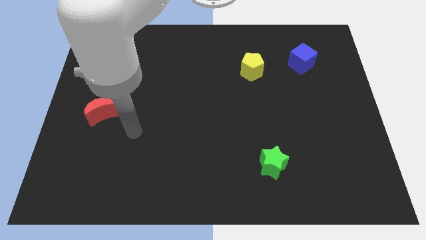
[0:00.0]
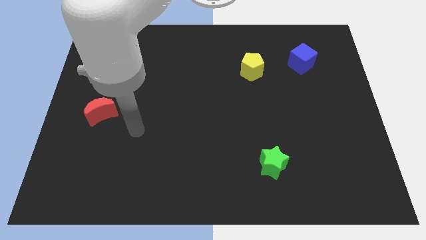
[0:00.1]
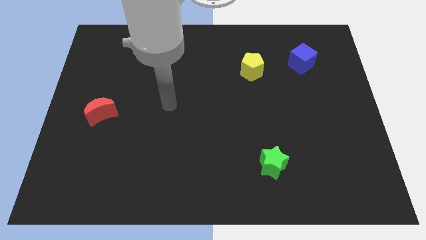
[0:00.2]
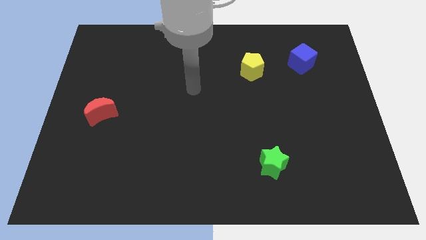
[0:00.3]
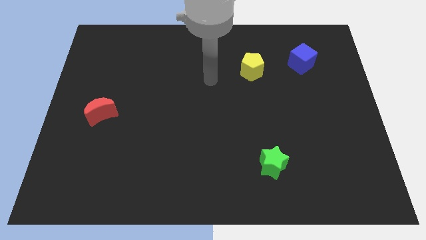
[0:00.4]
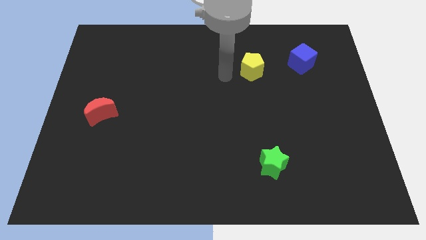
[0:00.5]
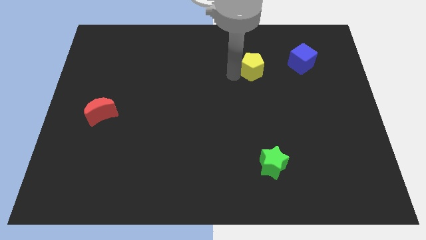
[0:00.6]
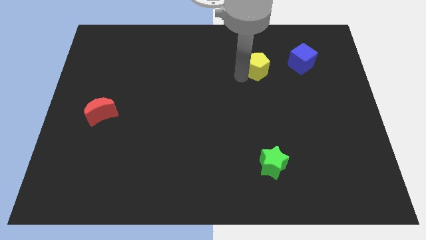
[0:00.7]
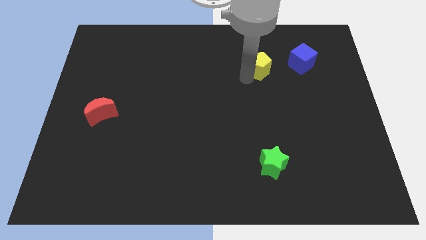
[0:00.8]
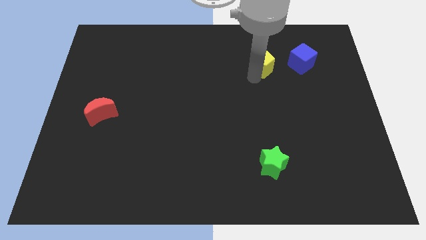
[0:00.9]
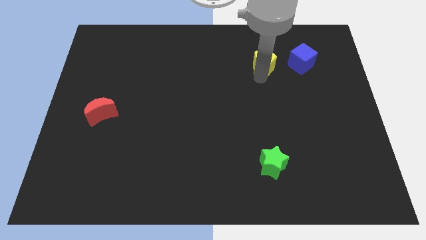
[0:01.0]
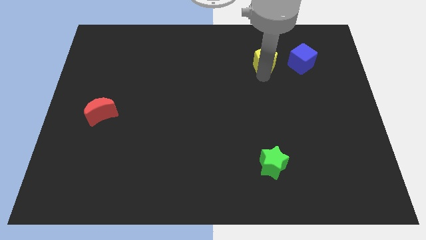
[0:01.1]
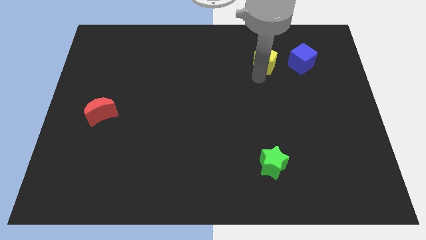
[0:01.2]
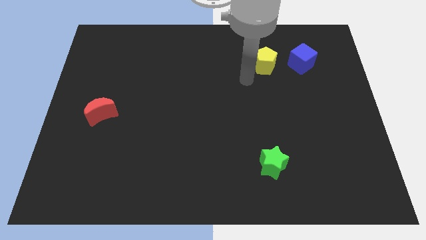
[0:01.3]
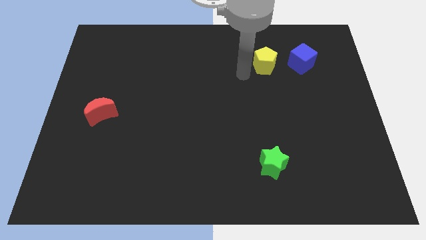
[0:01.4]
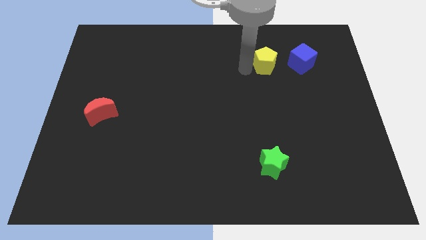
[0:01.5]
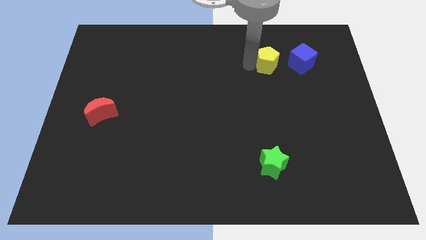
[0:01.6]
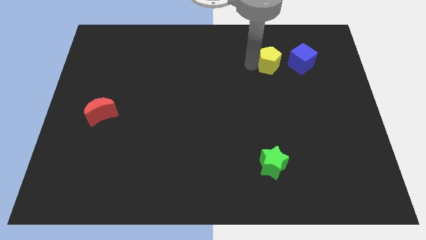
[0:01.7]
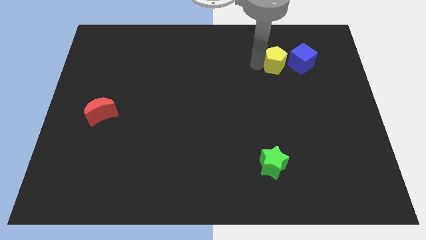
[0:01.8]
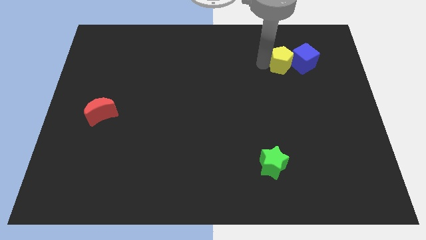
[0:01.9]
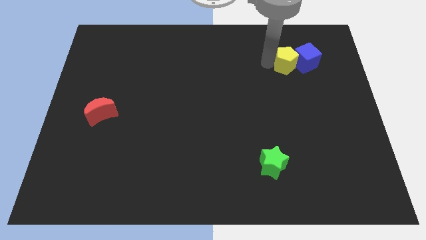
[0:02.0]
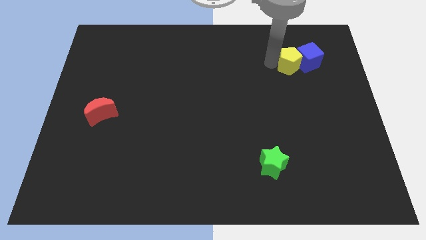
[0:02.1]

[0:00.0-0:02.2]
slide the yellow pentagon towards the blue cube

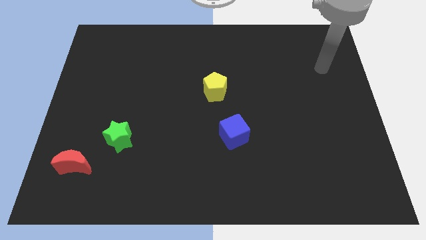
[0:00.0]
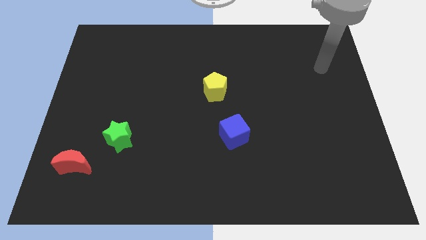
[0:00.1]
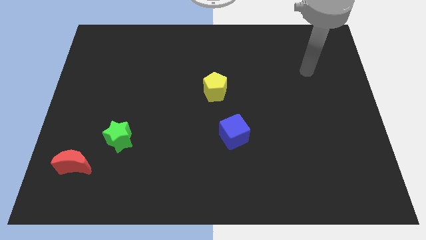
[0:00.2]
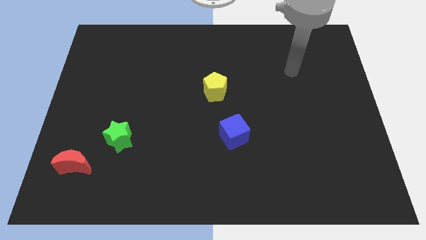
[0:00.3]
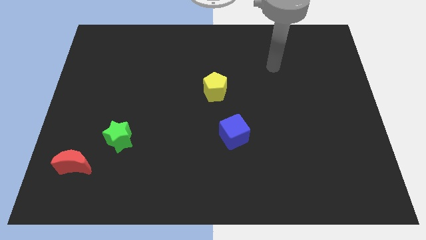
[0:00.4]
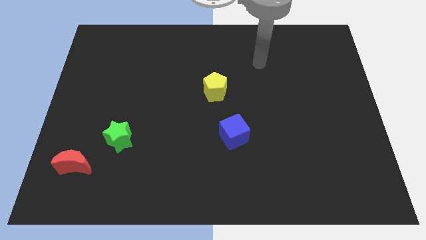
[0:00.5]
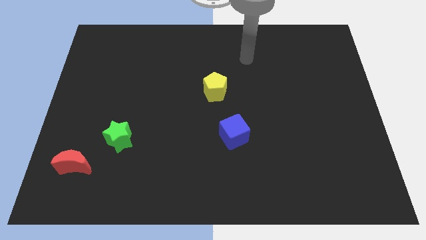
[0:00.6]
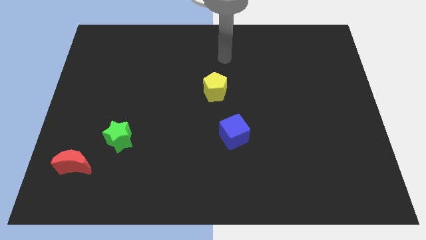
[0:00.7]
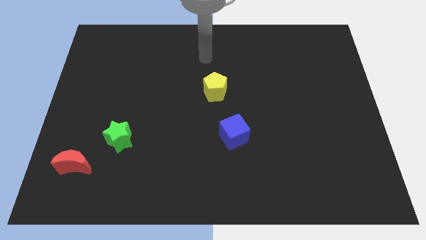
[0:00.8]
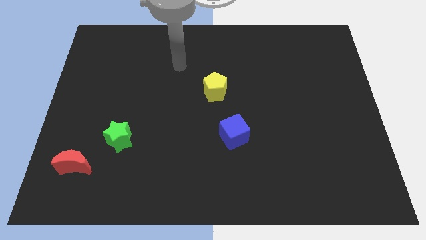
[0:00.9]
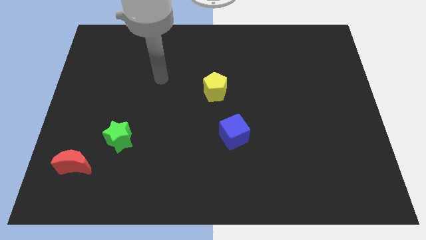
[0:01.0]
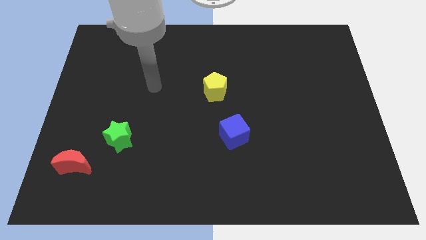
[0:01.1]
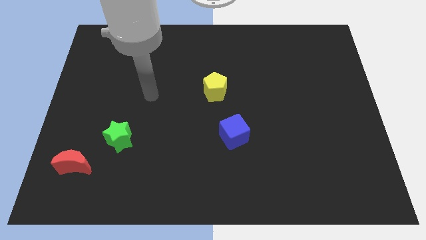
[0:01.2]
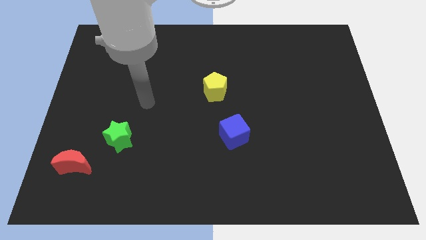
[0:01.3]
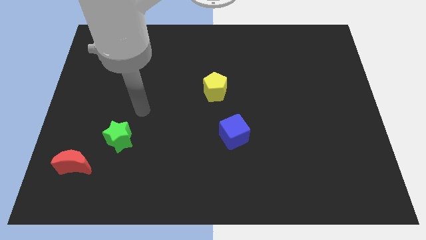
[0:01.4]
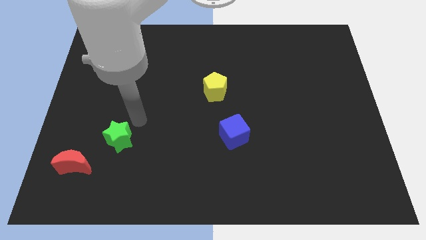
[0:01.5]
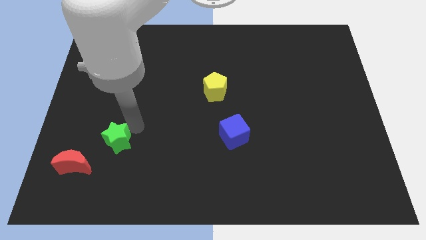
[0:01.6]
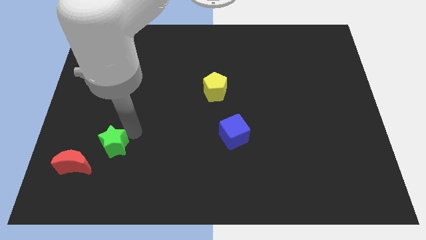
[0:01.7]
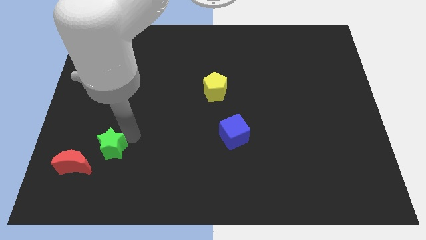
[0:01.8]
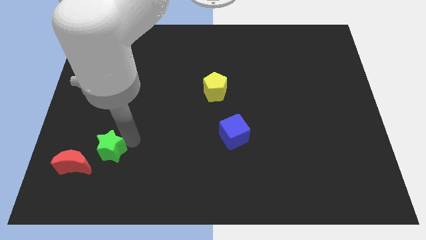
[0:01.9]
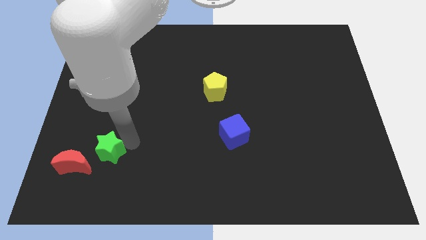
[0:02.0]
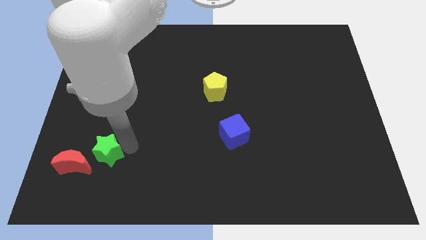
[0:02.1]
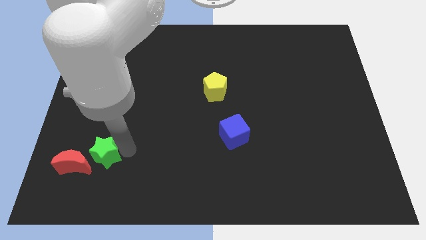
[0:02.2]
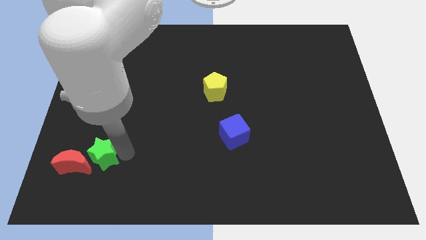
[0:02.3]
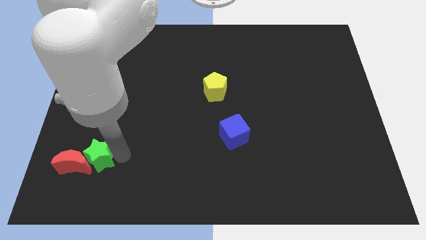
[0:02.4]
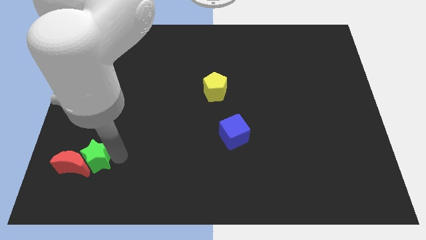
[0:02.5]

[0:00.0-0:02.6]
push the green block close to the red block

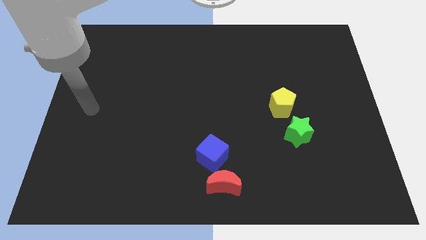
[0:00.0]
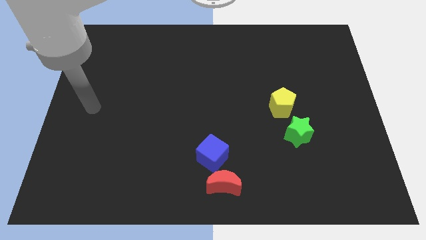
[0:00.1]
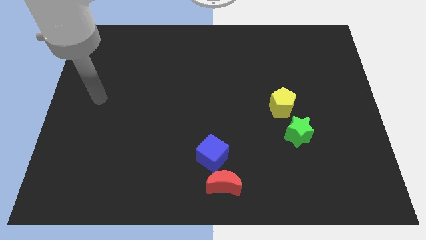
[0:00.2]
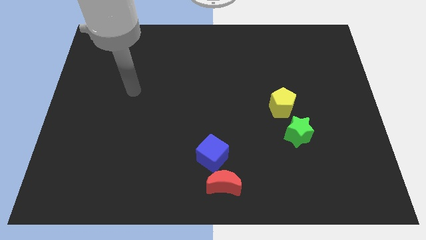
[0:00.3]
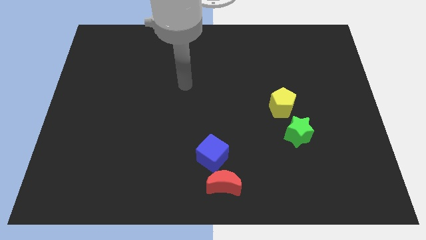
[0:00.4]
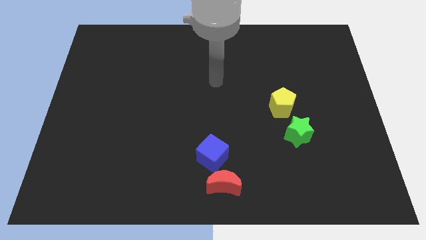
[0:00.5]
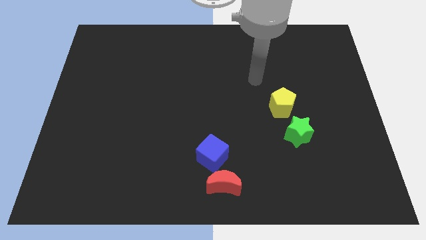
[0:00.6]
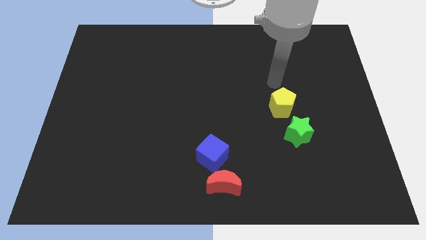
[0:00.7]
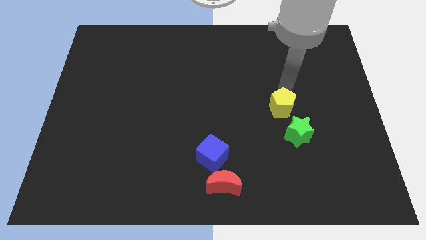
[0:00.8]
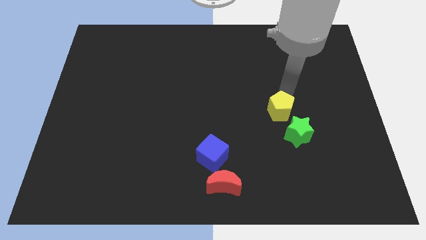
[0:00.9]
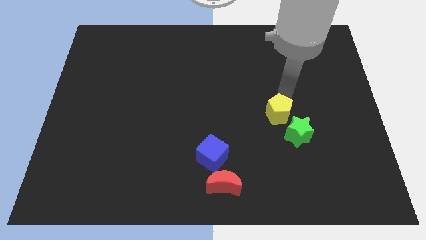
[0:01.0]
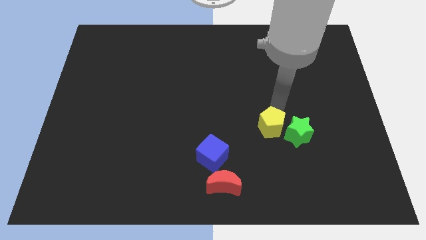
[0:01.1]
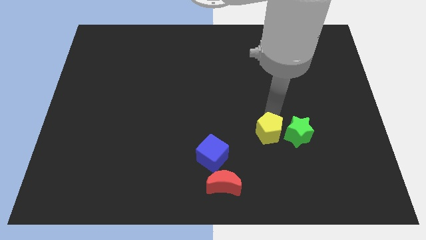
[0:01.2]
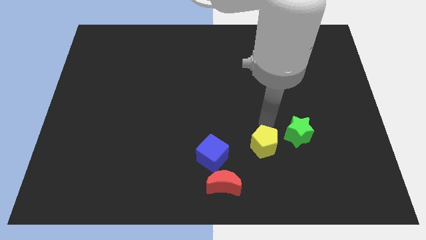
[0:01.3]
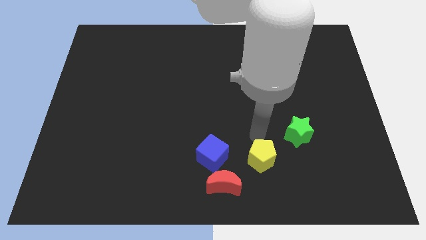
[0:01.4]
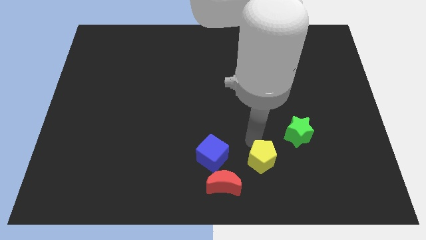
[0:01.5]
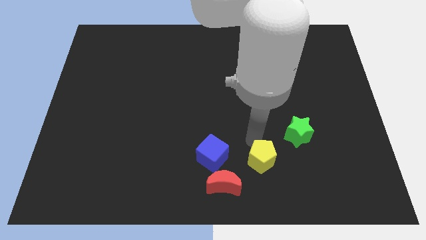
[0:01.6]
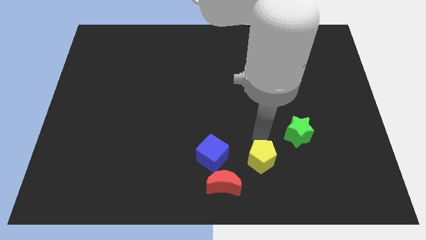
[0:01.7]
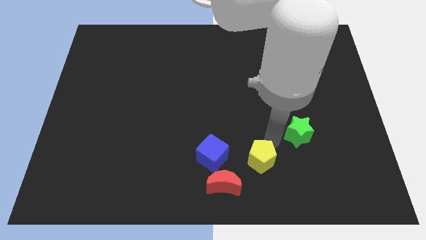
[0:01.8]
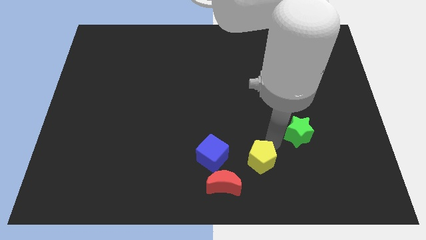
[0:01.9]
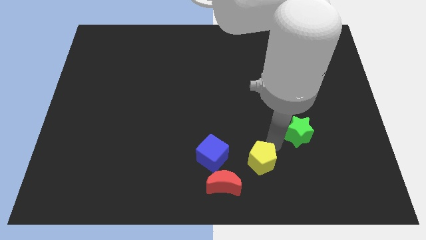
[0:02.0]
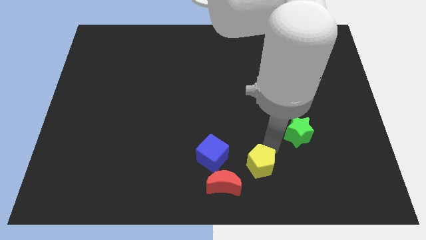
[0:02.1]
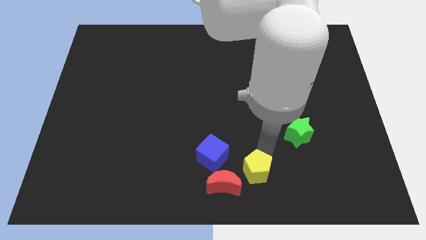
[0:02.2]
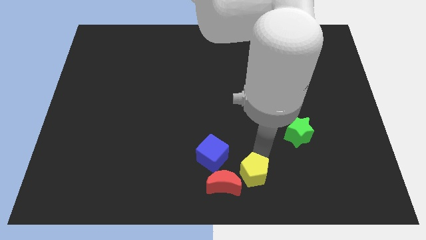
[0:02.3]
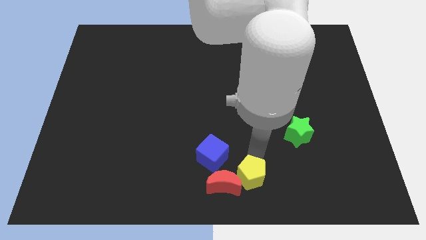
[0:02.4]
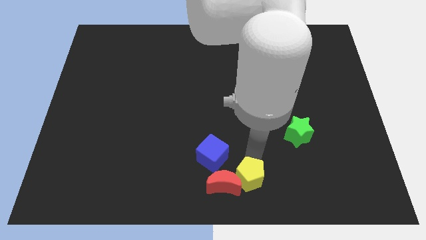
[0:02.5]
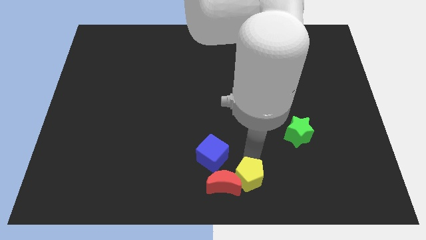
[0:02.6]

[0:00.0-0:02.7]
put the yellow block to the red block

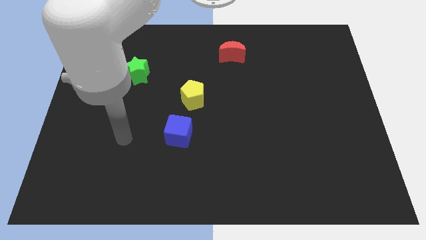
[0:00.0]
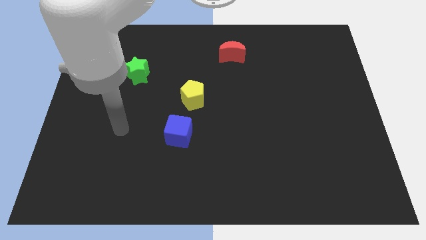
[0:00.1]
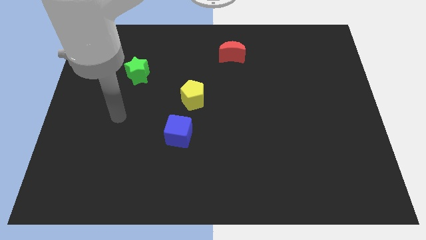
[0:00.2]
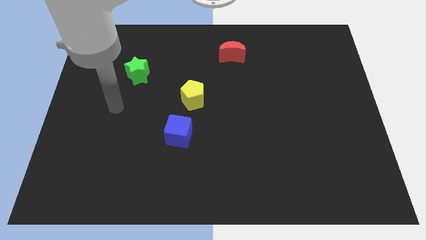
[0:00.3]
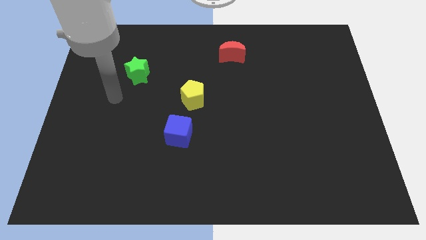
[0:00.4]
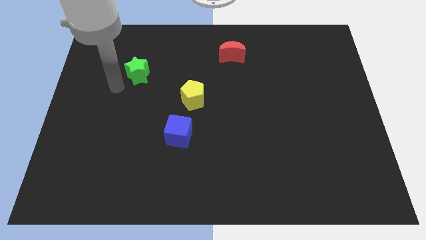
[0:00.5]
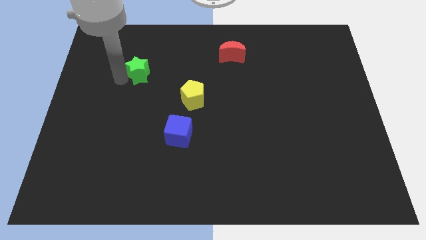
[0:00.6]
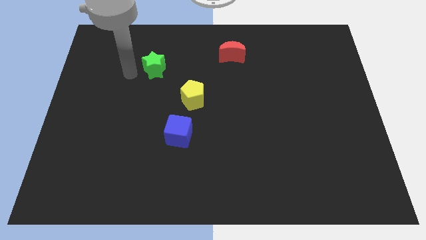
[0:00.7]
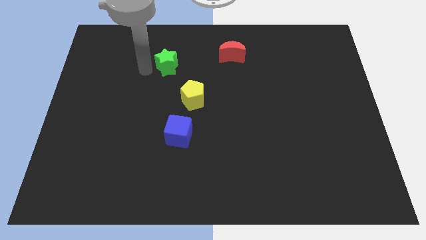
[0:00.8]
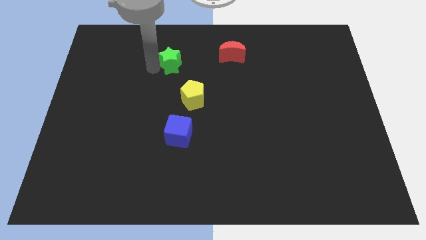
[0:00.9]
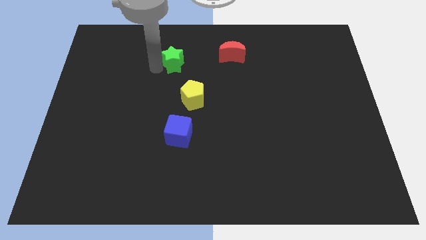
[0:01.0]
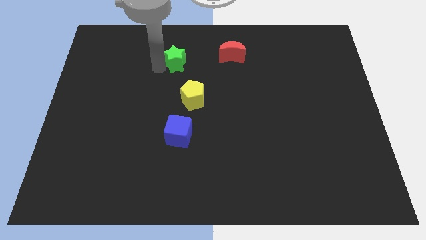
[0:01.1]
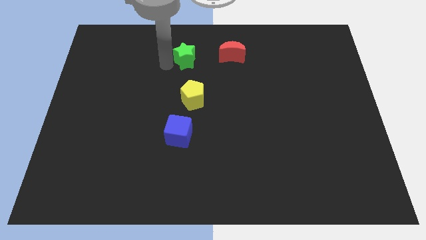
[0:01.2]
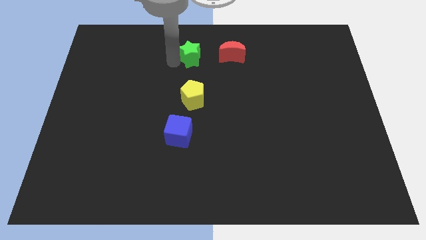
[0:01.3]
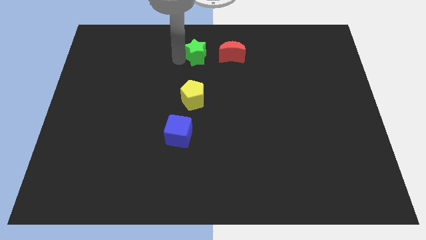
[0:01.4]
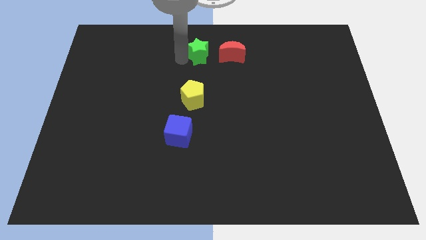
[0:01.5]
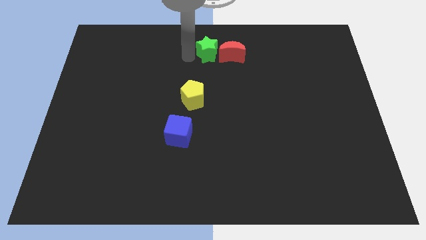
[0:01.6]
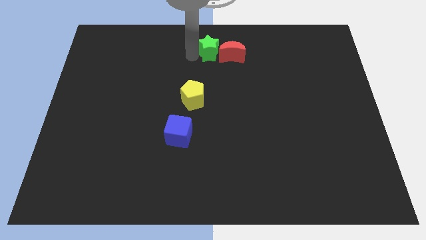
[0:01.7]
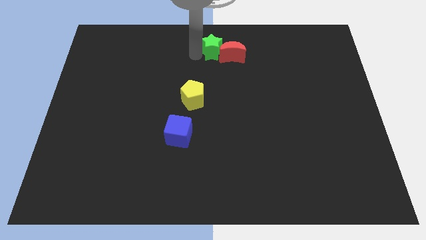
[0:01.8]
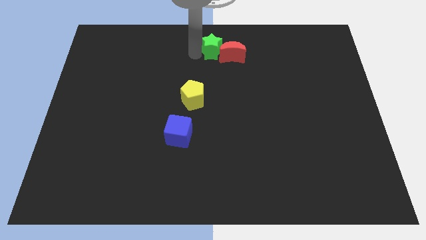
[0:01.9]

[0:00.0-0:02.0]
put the green star towards the red block
